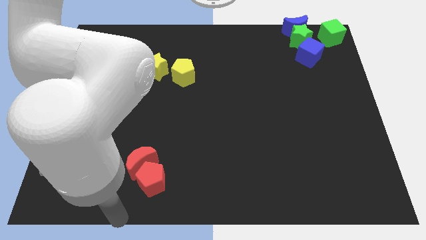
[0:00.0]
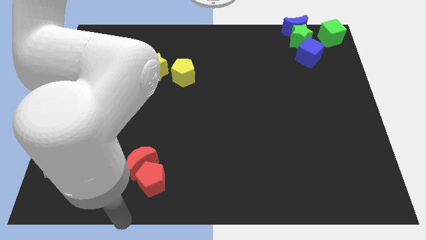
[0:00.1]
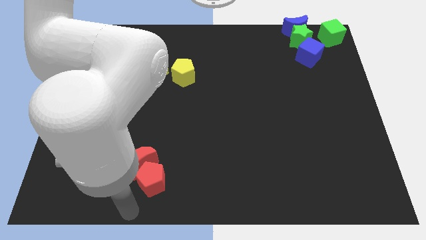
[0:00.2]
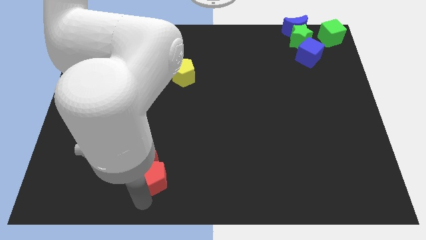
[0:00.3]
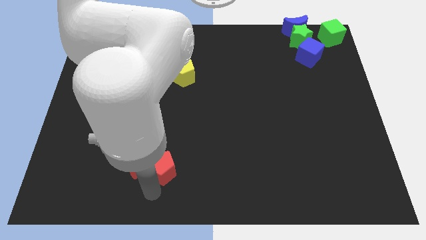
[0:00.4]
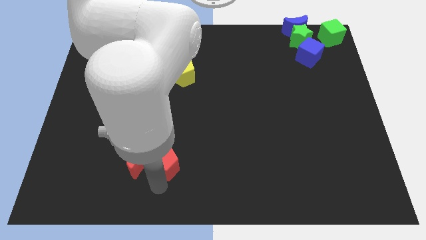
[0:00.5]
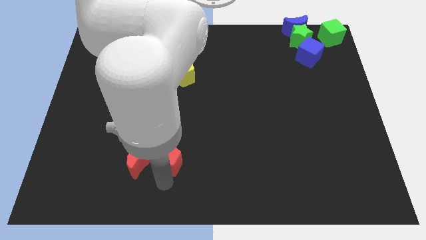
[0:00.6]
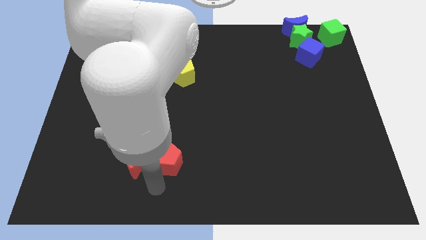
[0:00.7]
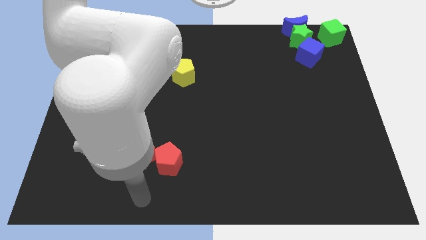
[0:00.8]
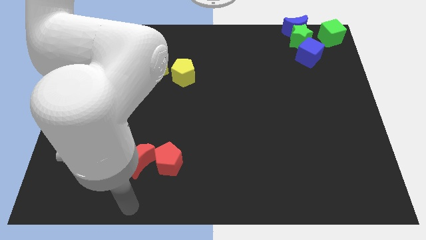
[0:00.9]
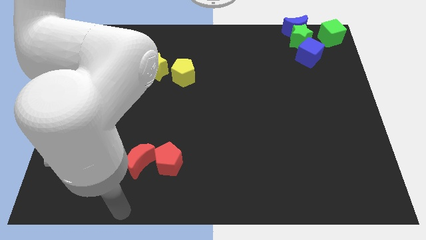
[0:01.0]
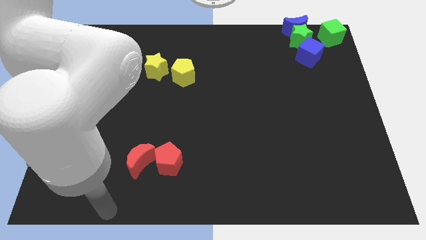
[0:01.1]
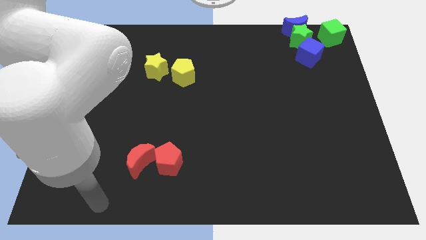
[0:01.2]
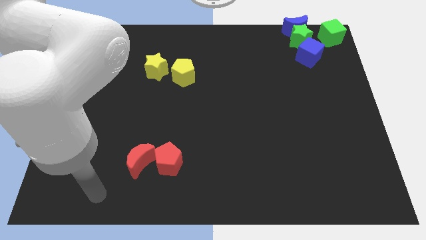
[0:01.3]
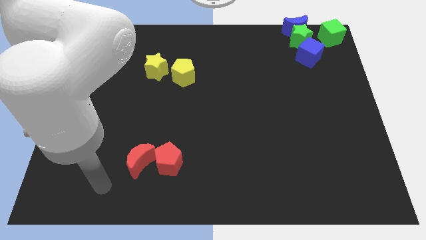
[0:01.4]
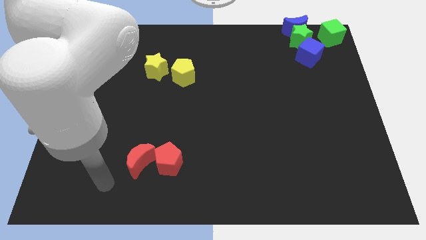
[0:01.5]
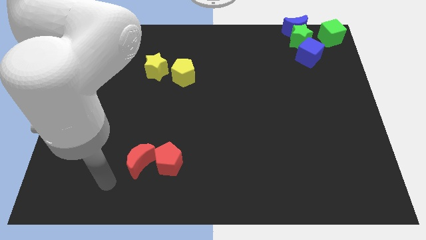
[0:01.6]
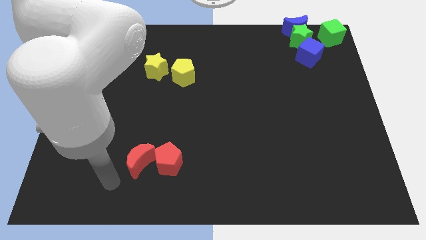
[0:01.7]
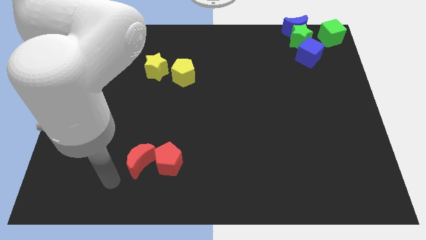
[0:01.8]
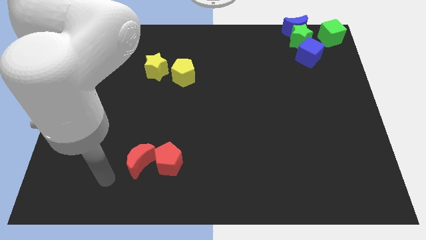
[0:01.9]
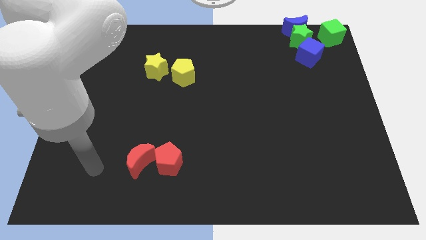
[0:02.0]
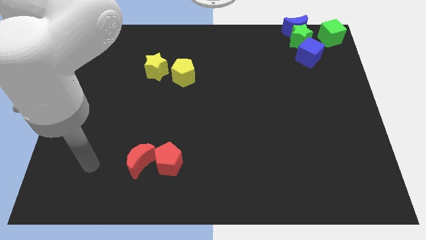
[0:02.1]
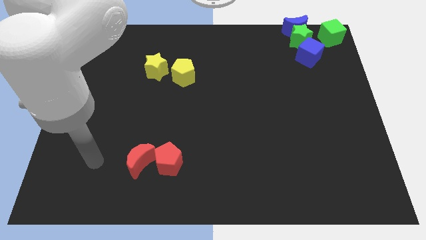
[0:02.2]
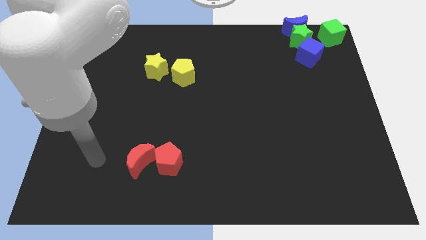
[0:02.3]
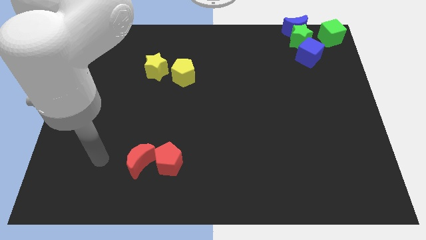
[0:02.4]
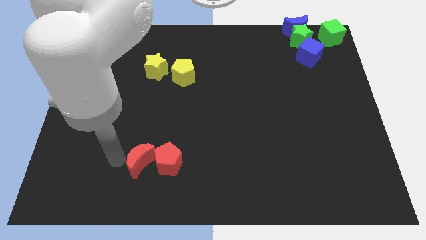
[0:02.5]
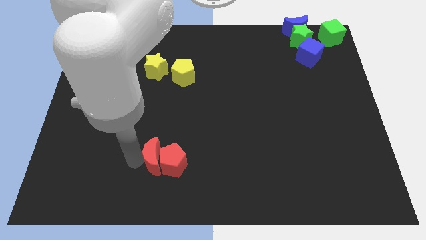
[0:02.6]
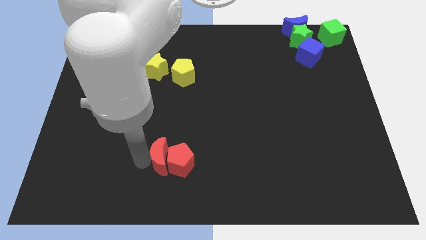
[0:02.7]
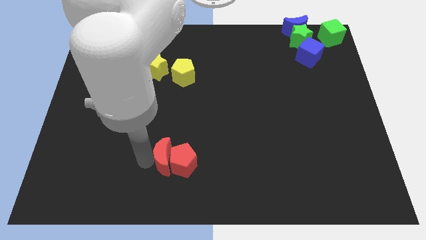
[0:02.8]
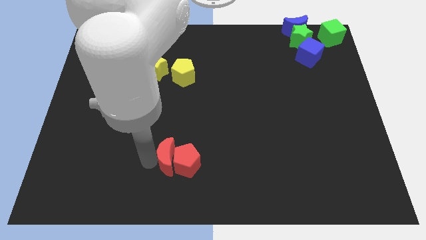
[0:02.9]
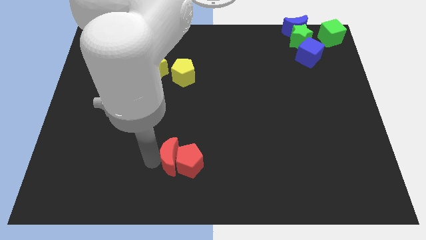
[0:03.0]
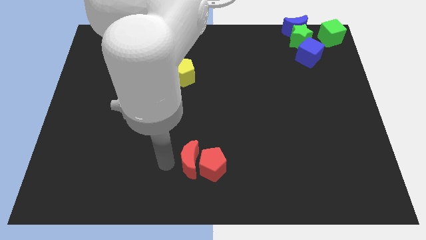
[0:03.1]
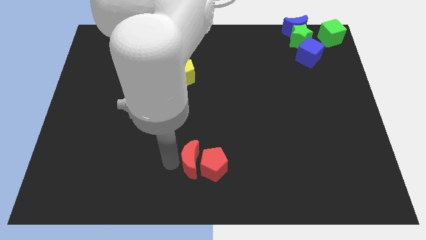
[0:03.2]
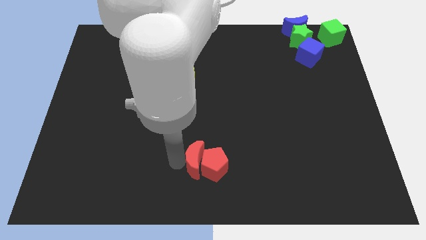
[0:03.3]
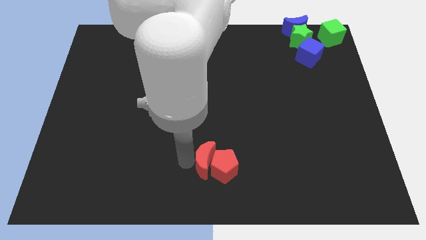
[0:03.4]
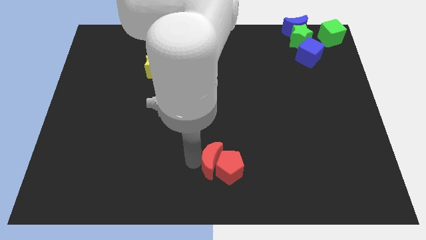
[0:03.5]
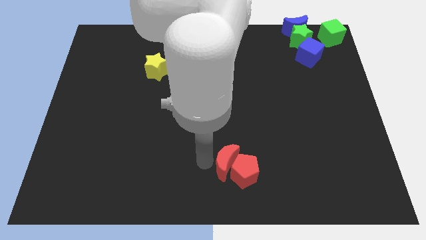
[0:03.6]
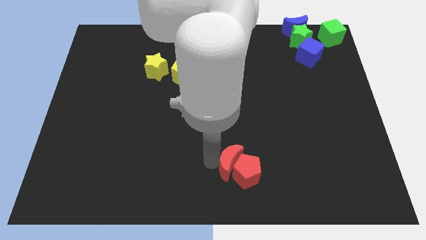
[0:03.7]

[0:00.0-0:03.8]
push the red blocks slightly to the right

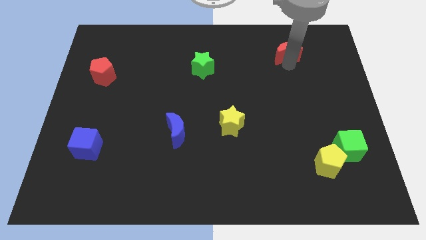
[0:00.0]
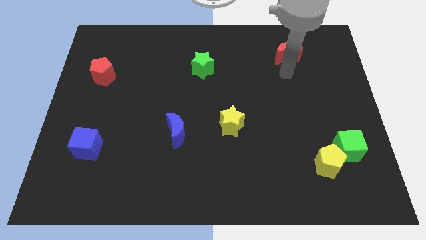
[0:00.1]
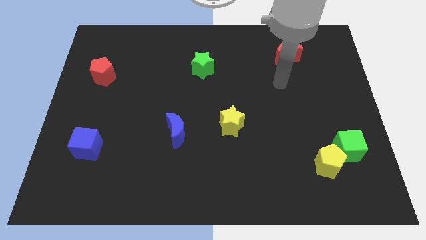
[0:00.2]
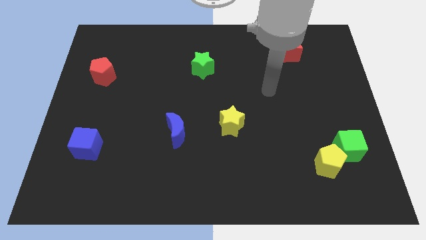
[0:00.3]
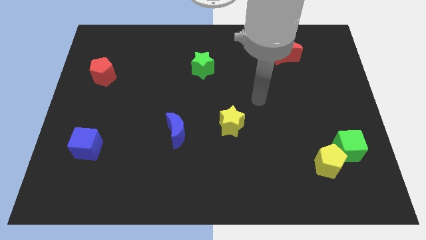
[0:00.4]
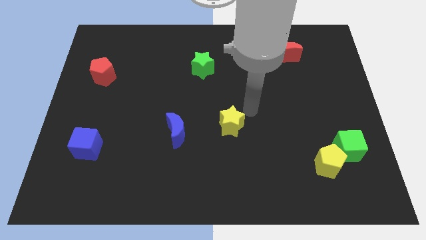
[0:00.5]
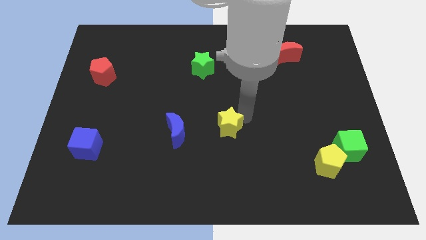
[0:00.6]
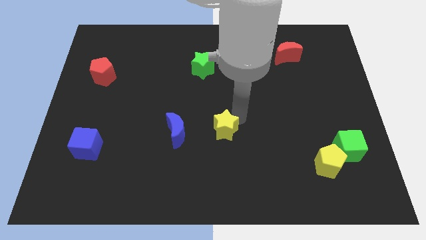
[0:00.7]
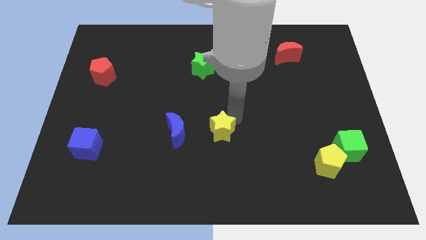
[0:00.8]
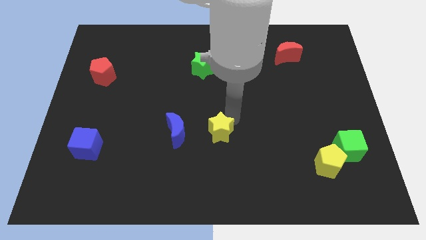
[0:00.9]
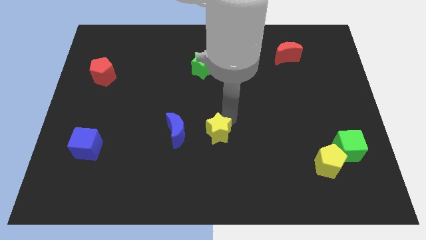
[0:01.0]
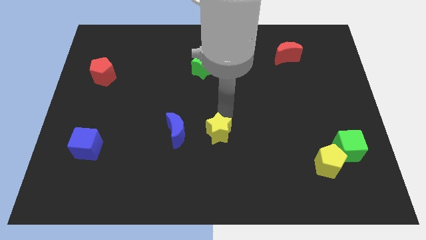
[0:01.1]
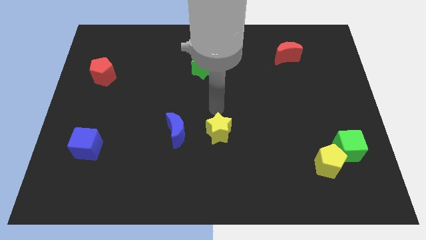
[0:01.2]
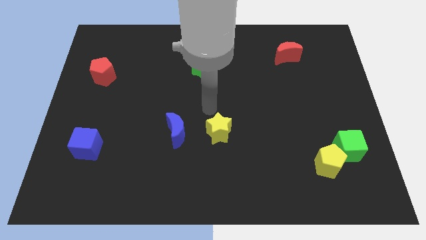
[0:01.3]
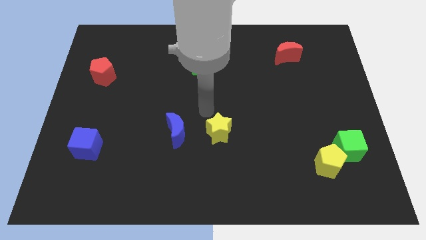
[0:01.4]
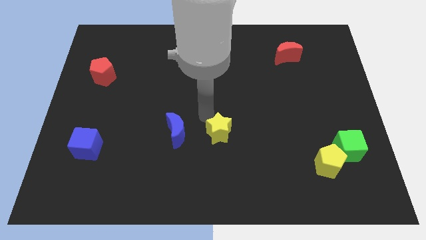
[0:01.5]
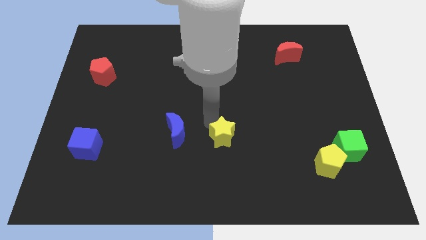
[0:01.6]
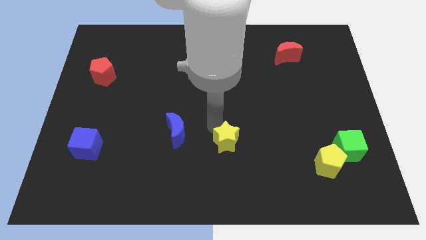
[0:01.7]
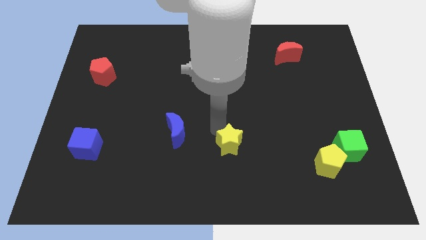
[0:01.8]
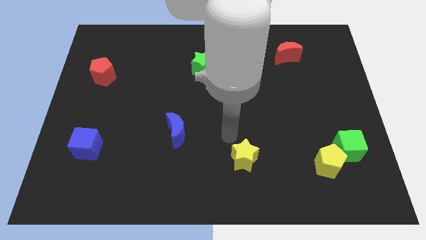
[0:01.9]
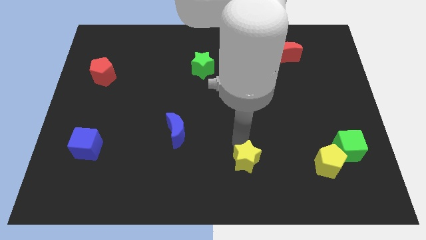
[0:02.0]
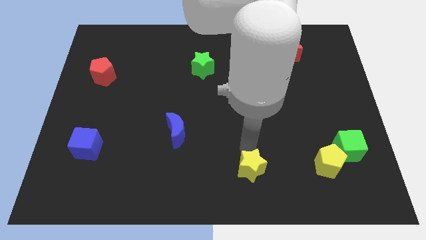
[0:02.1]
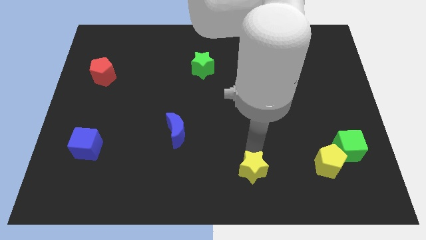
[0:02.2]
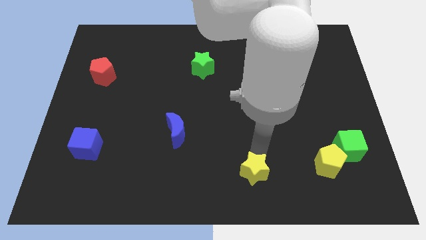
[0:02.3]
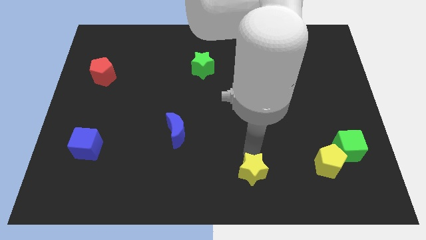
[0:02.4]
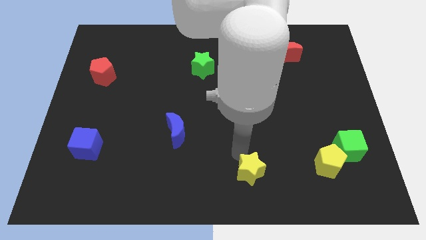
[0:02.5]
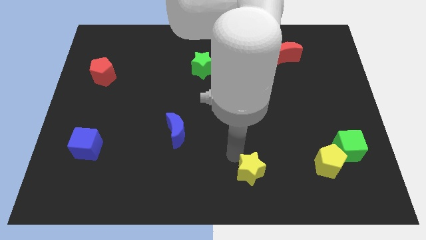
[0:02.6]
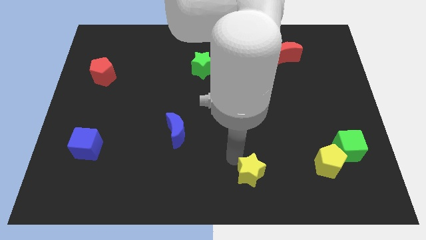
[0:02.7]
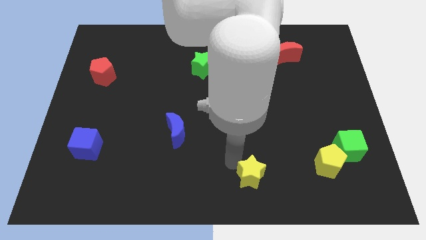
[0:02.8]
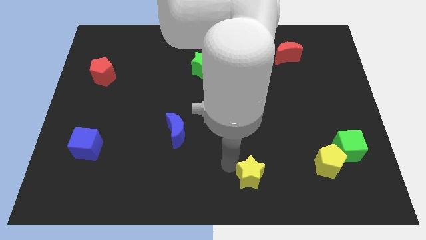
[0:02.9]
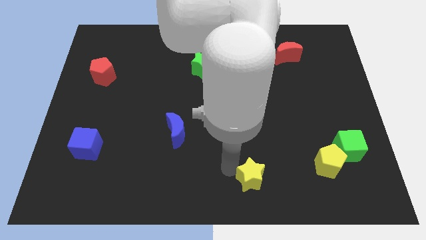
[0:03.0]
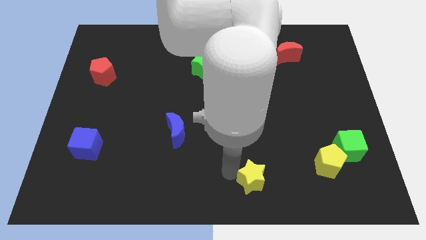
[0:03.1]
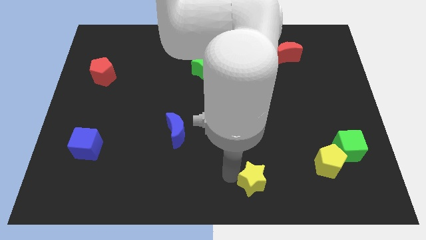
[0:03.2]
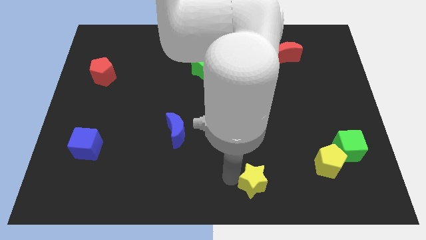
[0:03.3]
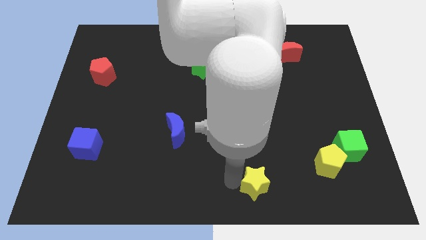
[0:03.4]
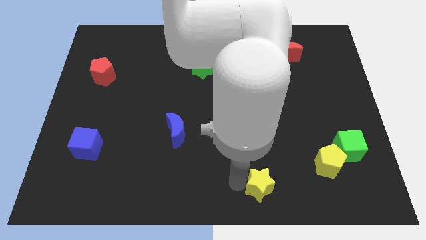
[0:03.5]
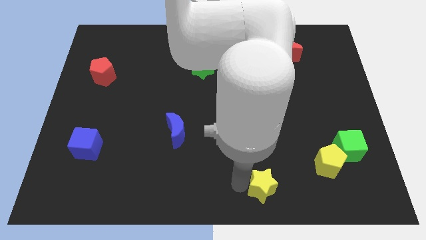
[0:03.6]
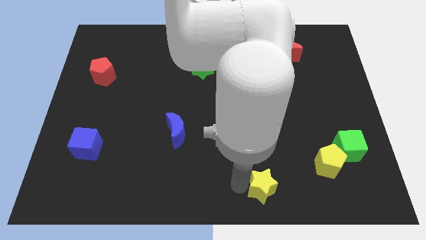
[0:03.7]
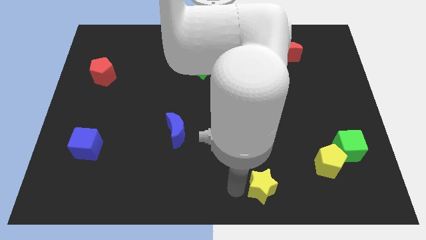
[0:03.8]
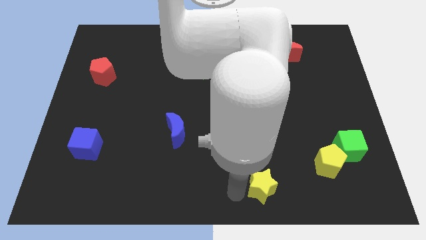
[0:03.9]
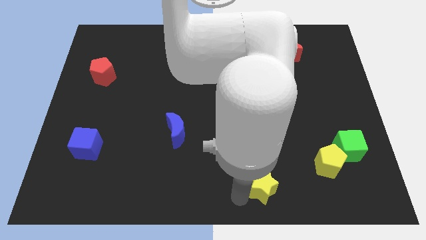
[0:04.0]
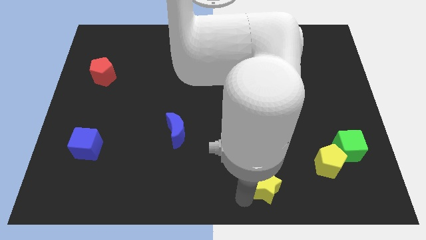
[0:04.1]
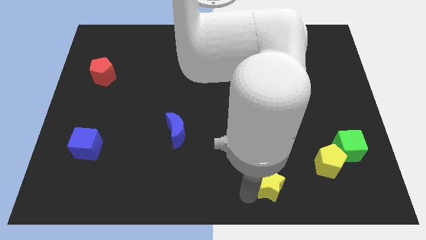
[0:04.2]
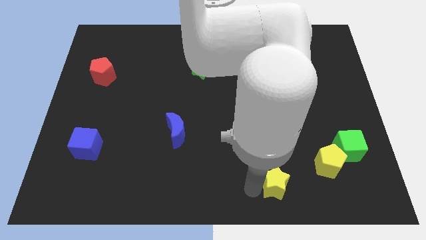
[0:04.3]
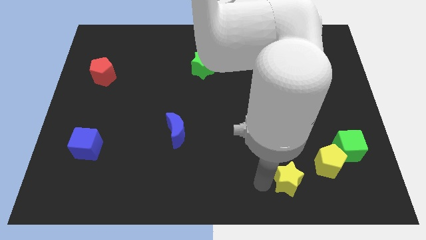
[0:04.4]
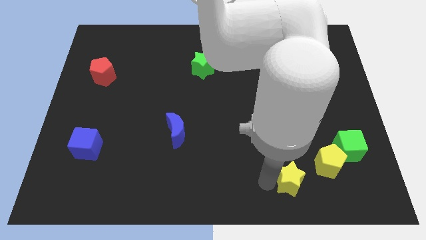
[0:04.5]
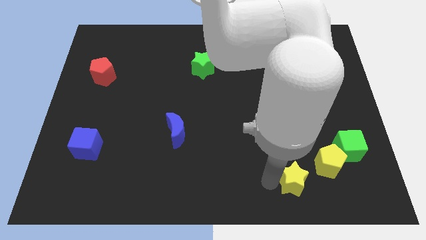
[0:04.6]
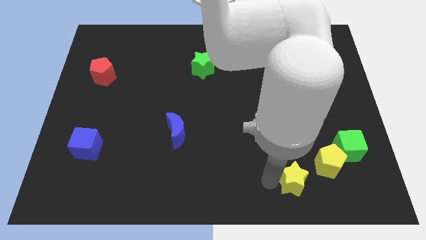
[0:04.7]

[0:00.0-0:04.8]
push the yellow star towards the left side of the yellow pentagon

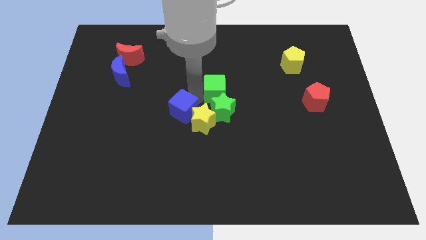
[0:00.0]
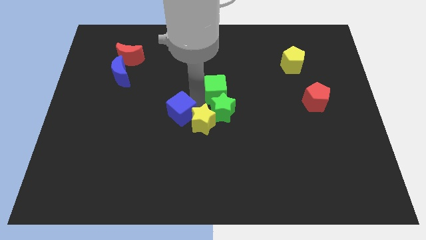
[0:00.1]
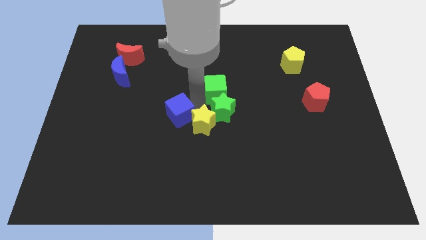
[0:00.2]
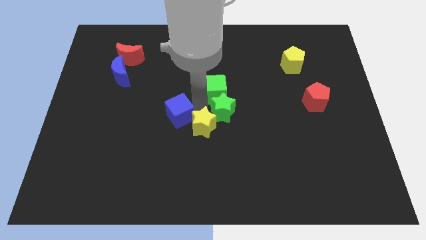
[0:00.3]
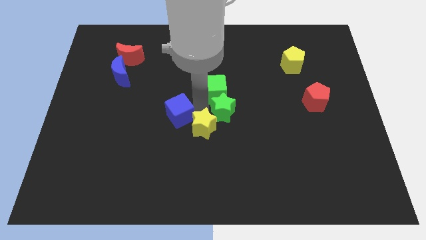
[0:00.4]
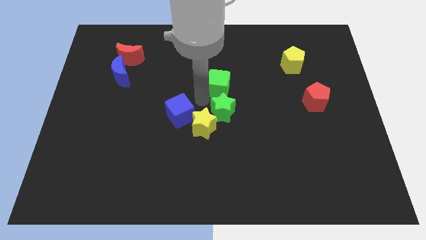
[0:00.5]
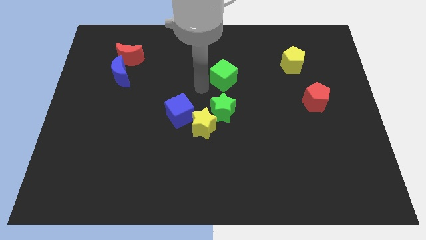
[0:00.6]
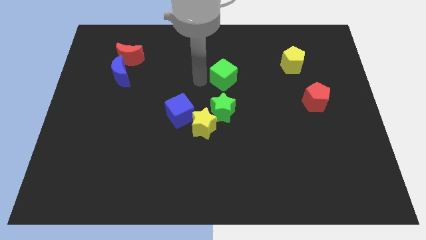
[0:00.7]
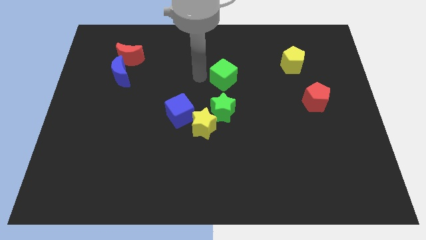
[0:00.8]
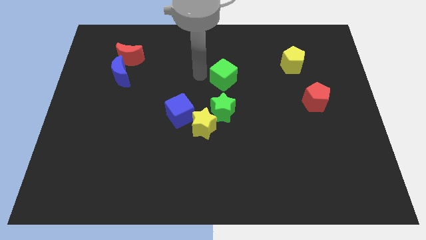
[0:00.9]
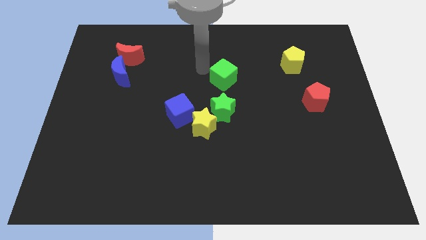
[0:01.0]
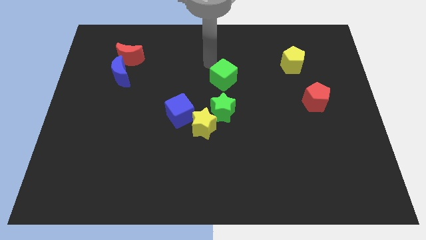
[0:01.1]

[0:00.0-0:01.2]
move the green cube vertically to the top of the green star
